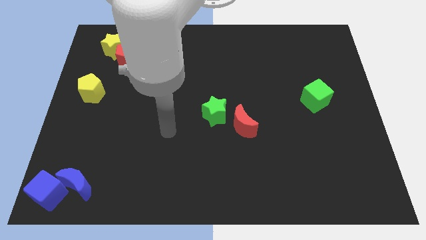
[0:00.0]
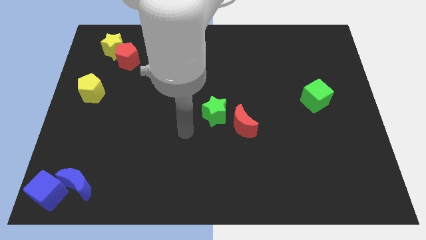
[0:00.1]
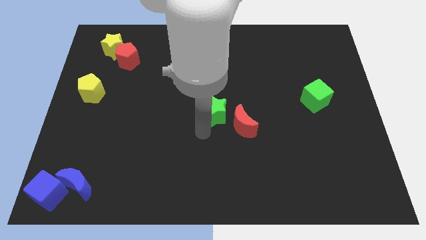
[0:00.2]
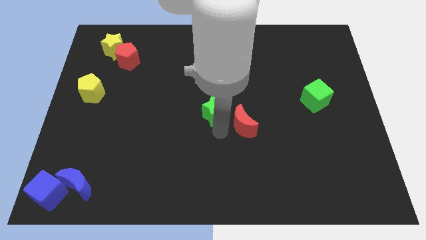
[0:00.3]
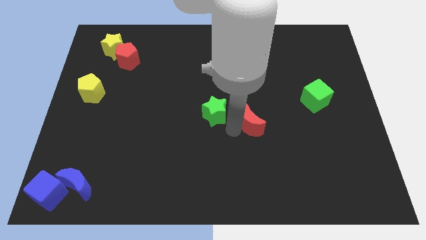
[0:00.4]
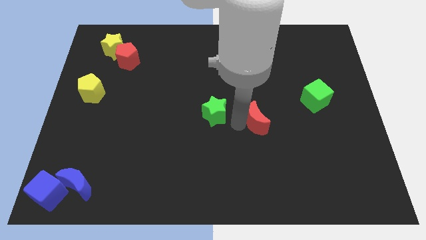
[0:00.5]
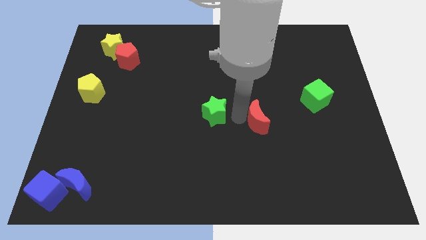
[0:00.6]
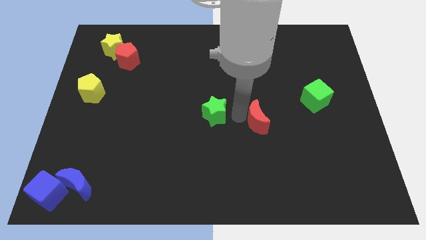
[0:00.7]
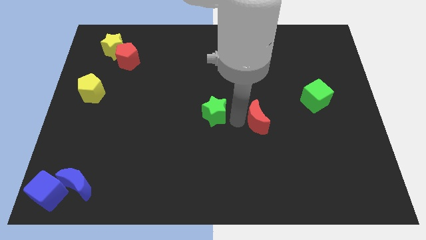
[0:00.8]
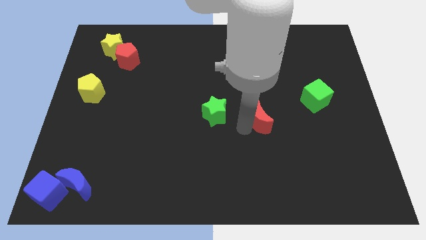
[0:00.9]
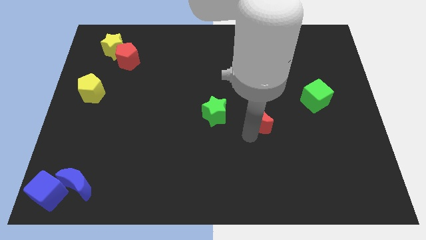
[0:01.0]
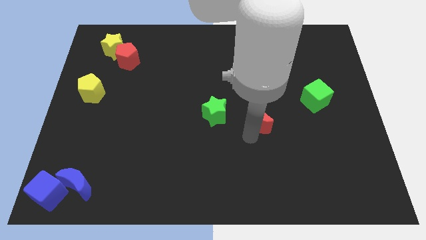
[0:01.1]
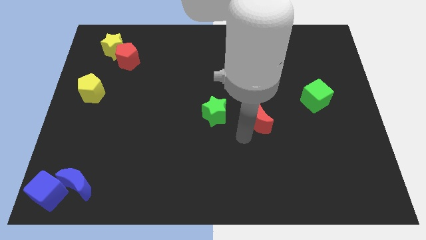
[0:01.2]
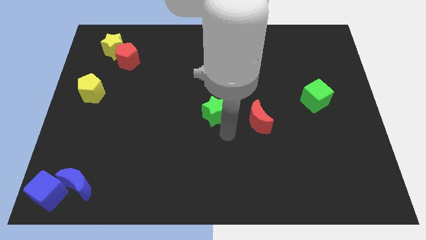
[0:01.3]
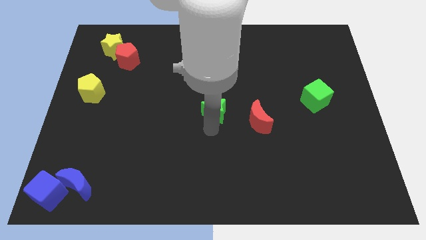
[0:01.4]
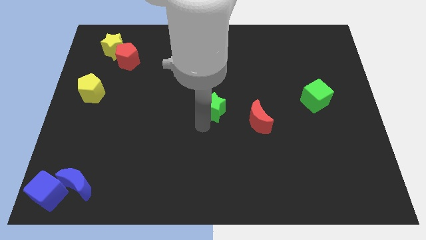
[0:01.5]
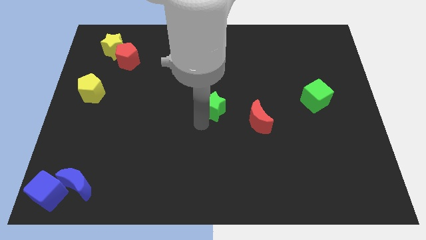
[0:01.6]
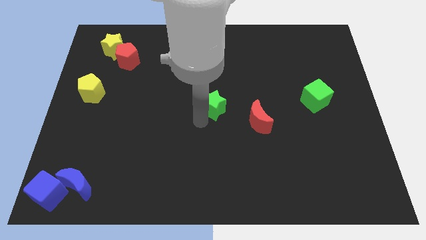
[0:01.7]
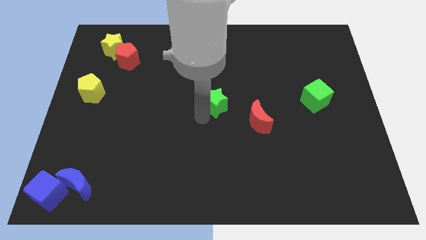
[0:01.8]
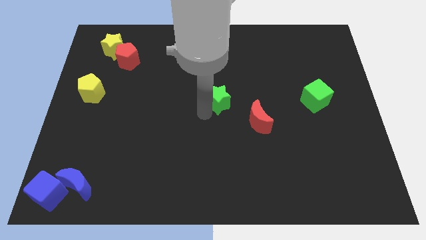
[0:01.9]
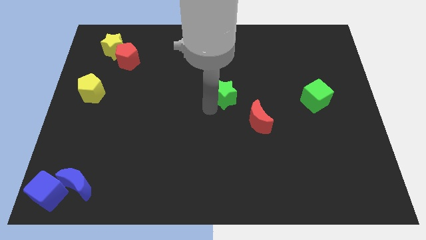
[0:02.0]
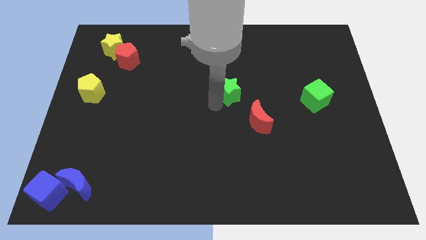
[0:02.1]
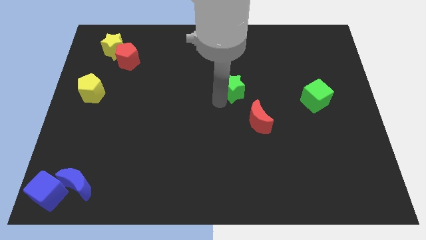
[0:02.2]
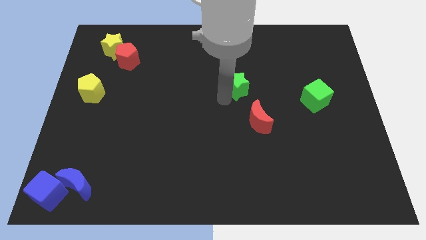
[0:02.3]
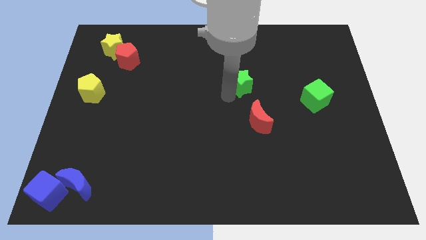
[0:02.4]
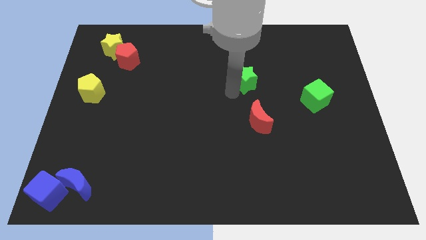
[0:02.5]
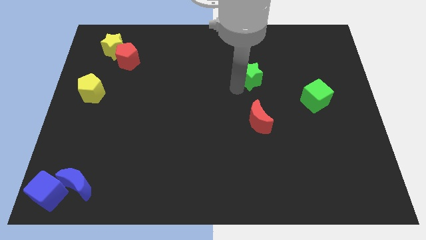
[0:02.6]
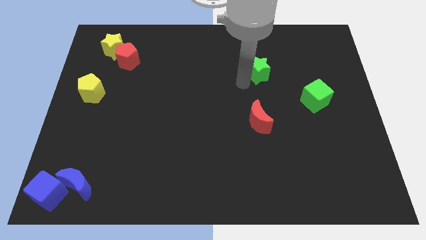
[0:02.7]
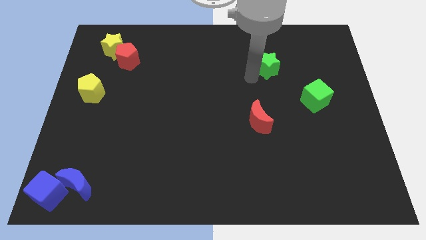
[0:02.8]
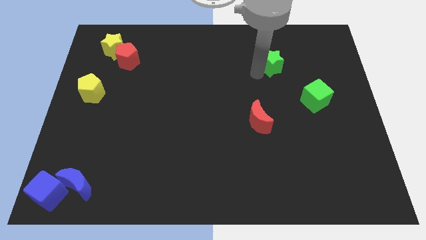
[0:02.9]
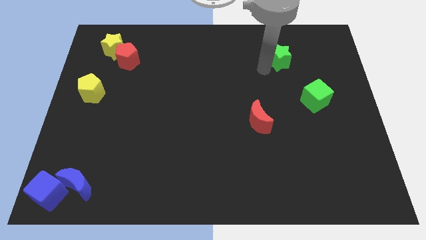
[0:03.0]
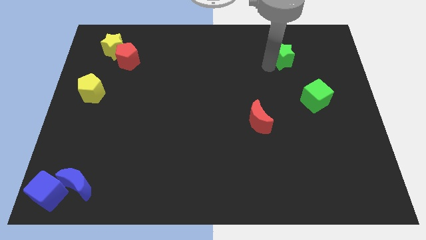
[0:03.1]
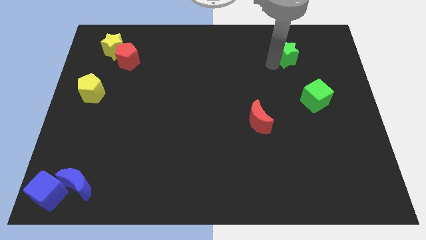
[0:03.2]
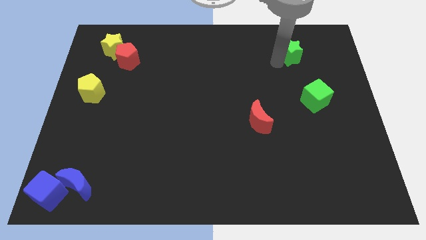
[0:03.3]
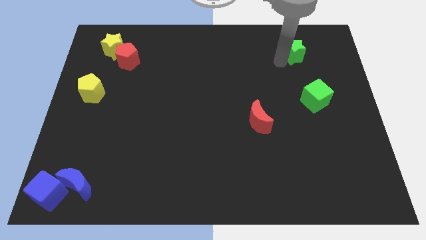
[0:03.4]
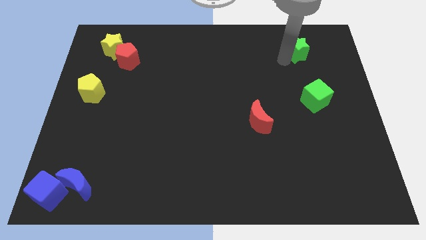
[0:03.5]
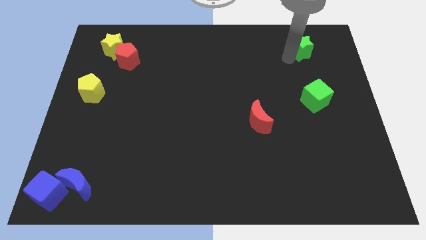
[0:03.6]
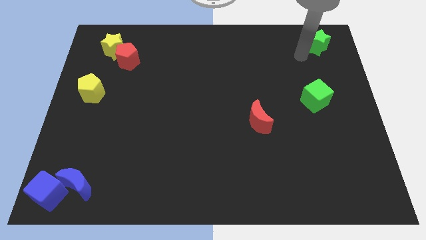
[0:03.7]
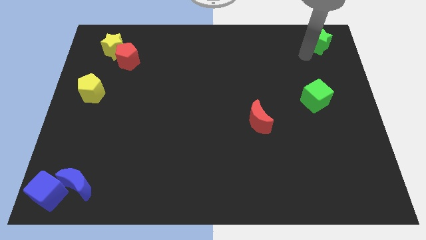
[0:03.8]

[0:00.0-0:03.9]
move the green star towards the top right

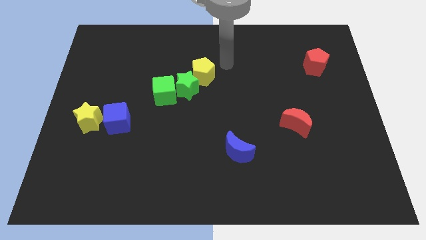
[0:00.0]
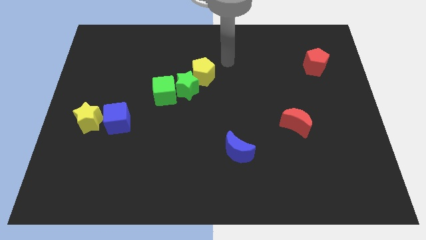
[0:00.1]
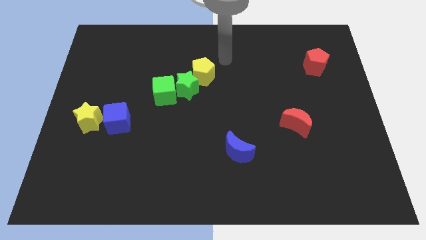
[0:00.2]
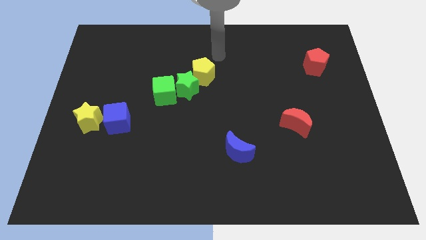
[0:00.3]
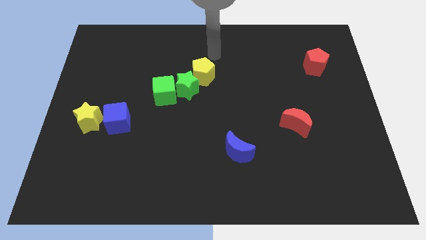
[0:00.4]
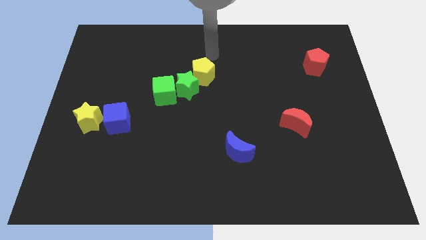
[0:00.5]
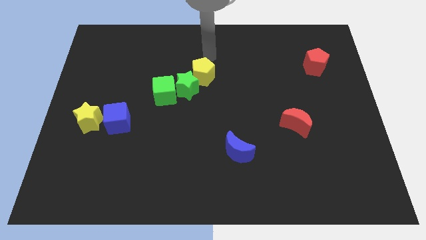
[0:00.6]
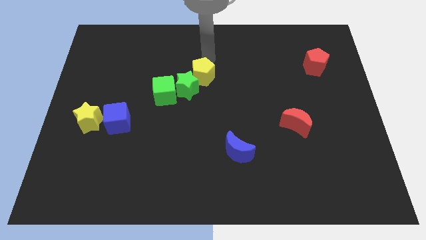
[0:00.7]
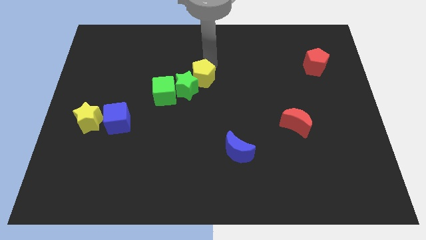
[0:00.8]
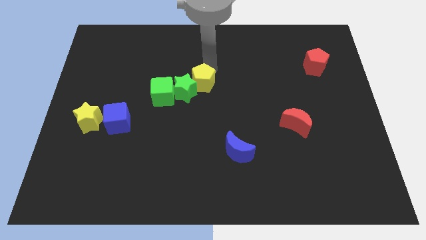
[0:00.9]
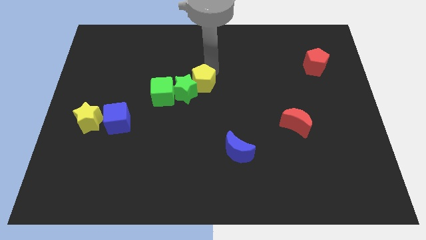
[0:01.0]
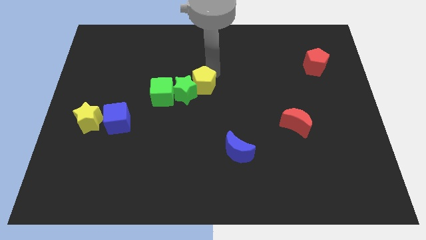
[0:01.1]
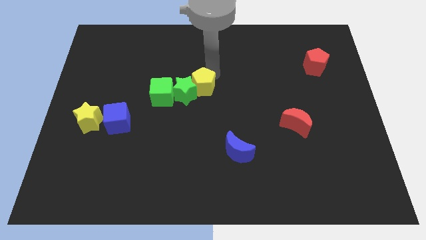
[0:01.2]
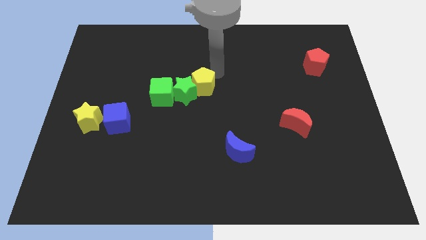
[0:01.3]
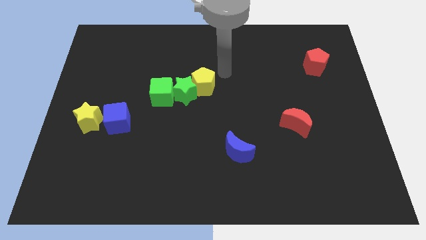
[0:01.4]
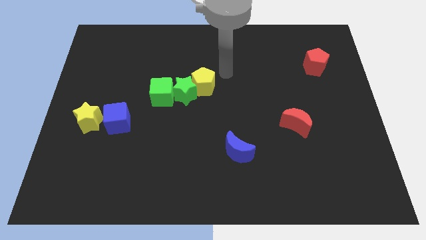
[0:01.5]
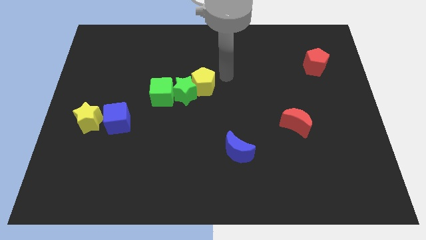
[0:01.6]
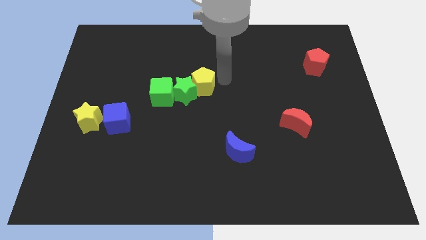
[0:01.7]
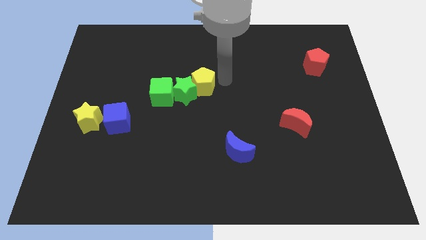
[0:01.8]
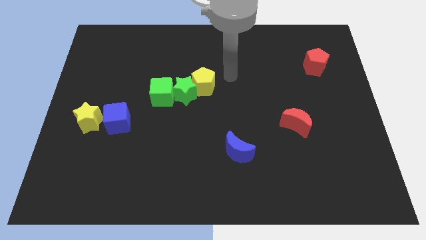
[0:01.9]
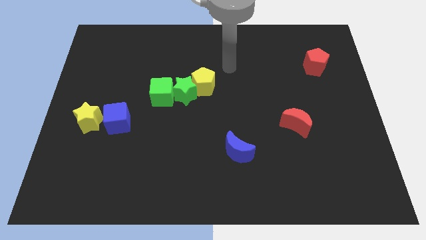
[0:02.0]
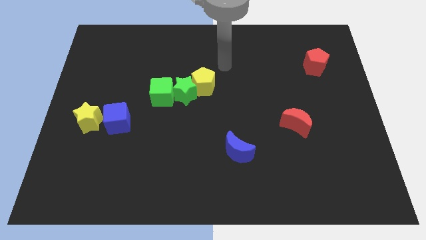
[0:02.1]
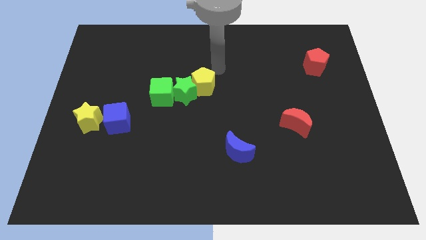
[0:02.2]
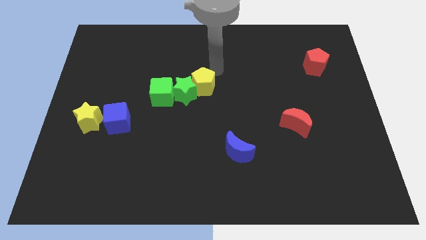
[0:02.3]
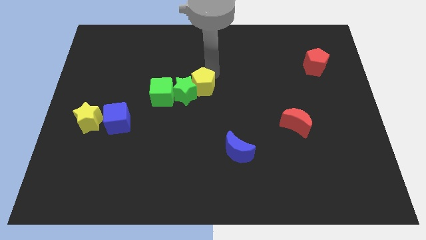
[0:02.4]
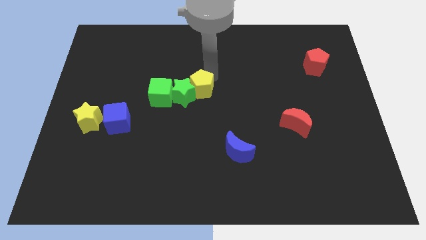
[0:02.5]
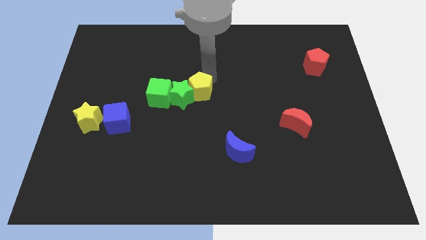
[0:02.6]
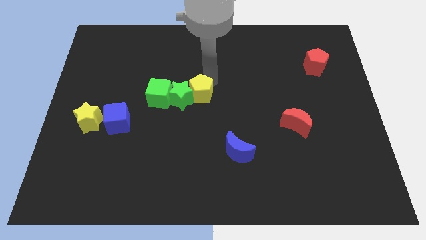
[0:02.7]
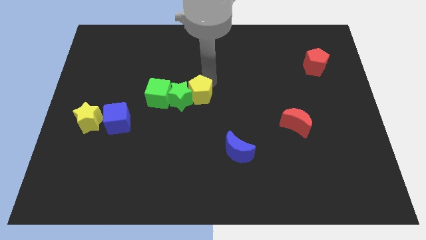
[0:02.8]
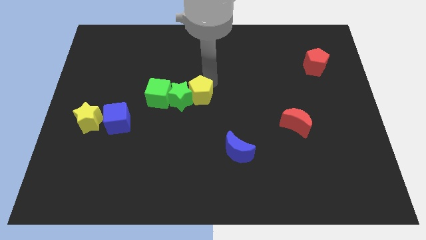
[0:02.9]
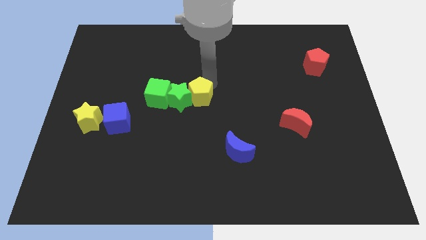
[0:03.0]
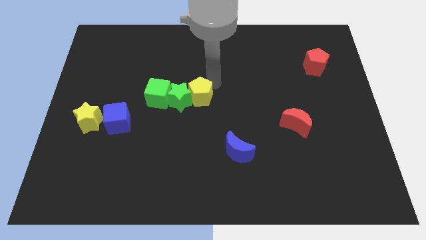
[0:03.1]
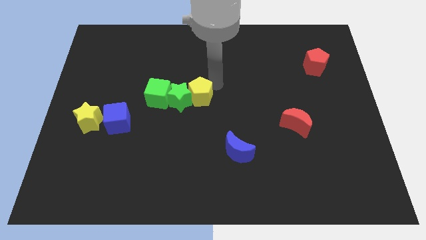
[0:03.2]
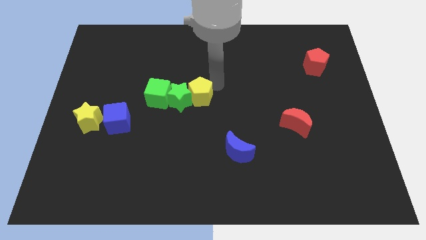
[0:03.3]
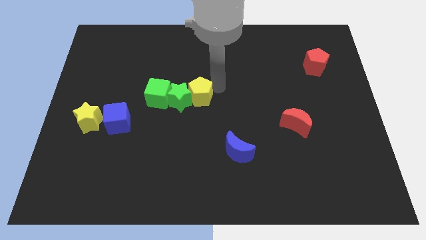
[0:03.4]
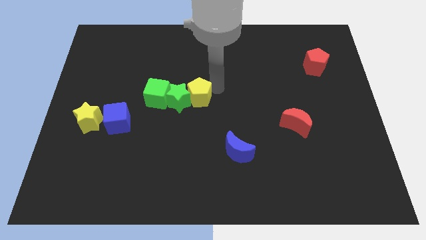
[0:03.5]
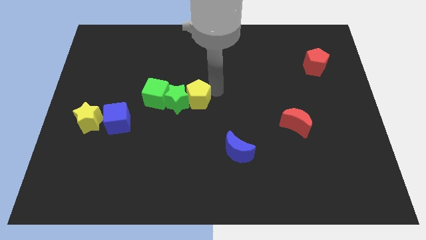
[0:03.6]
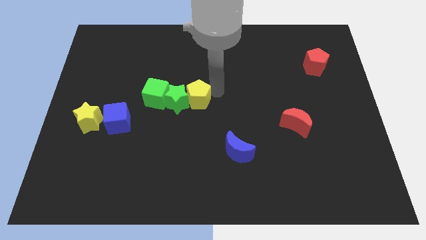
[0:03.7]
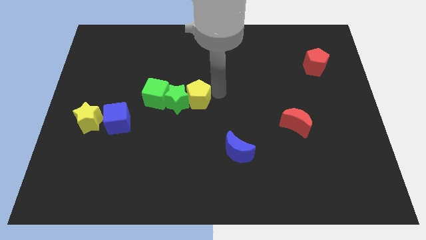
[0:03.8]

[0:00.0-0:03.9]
push yellow pentagon slightly towards down

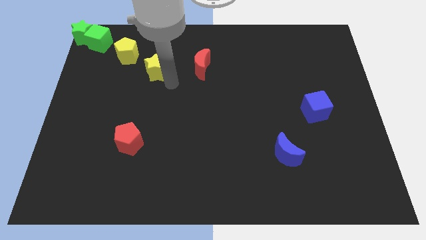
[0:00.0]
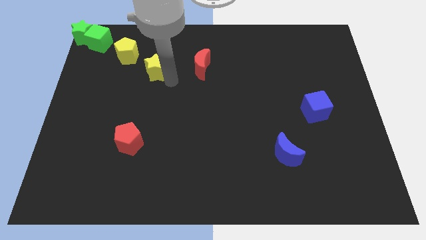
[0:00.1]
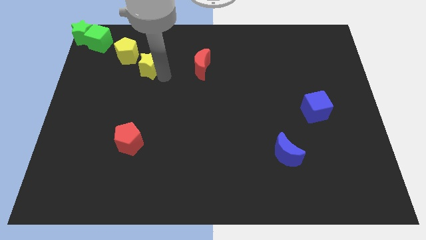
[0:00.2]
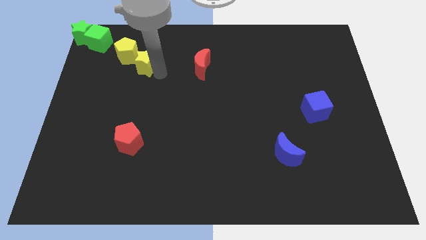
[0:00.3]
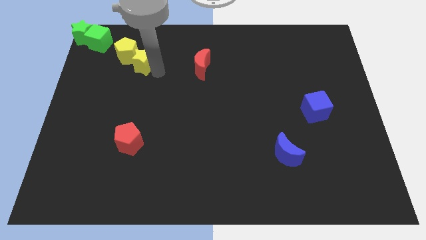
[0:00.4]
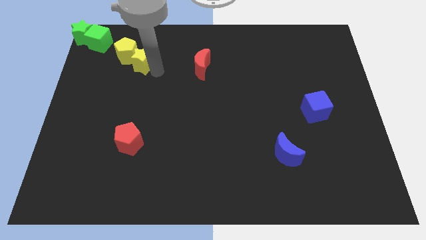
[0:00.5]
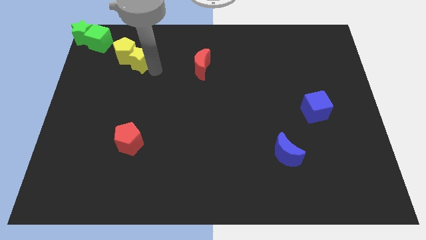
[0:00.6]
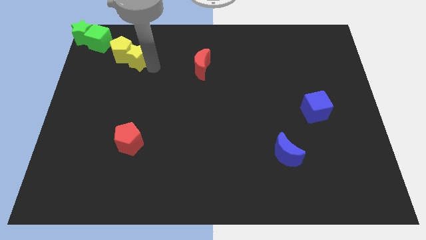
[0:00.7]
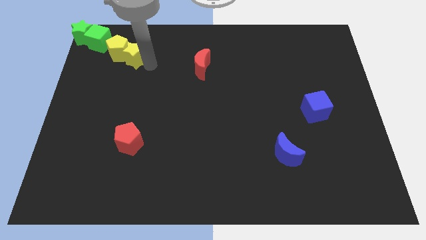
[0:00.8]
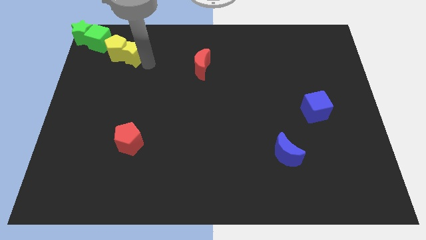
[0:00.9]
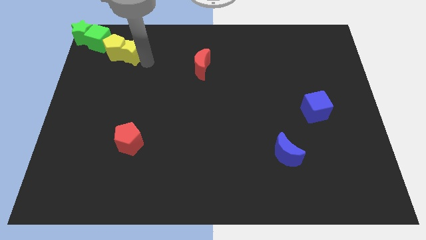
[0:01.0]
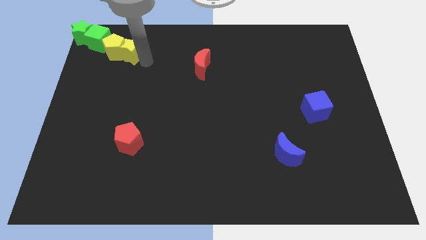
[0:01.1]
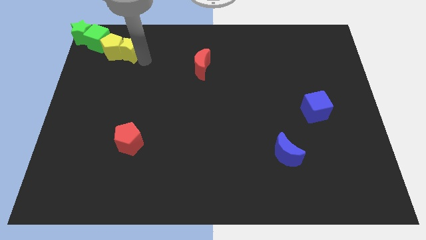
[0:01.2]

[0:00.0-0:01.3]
move the group of yellow blocks into the green cube
